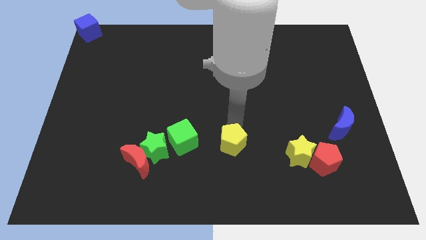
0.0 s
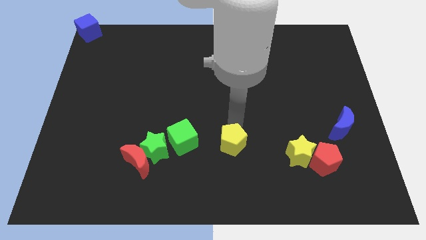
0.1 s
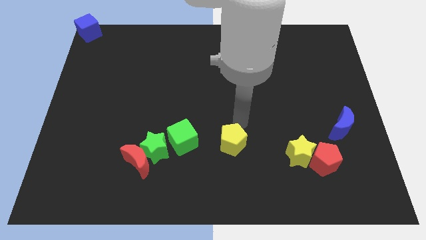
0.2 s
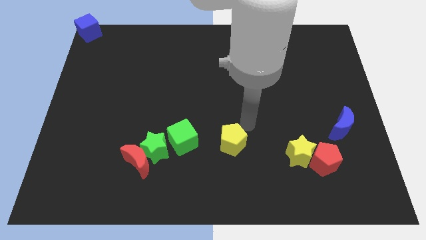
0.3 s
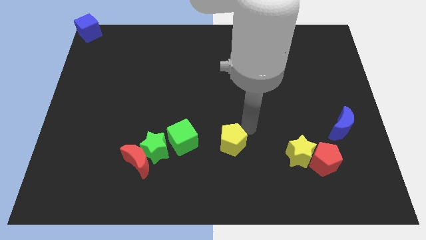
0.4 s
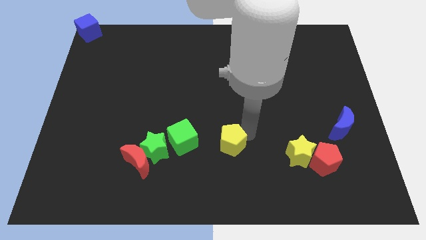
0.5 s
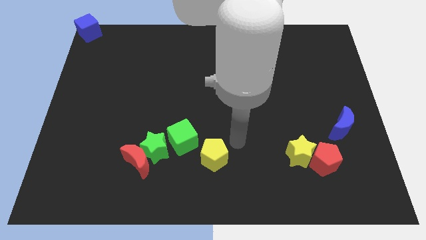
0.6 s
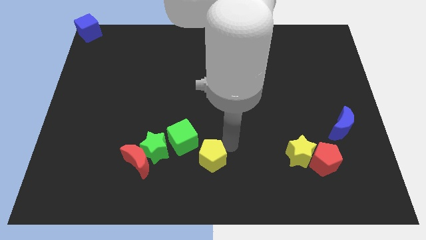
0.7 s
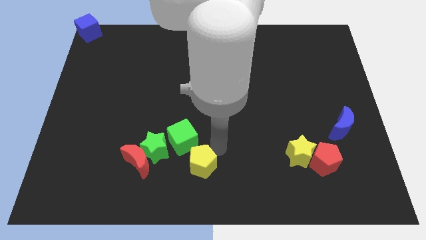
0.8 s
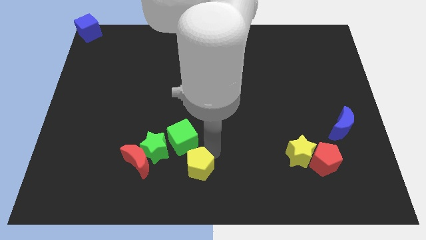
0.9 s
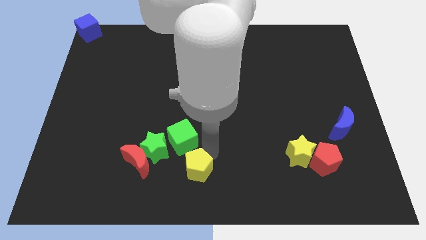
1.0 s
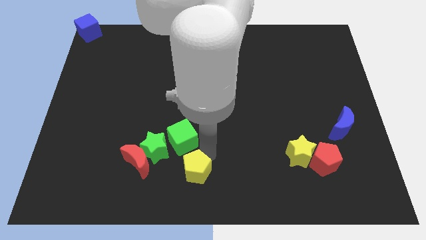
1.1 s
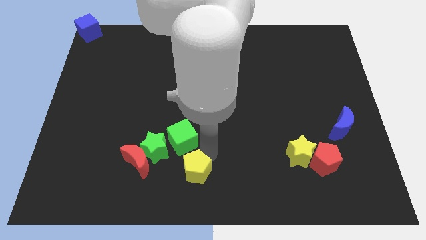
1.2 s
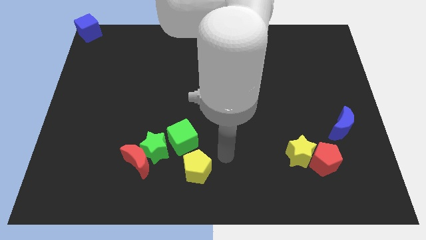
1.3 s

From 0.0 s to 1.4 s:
place the yellow pentagon below the green cube

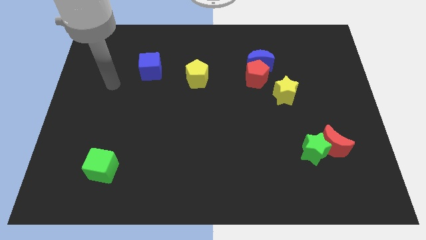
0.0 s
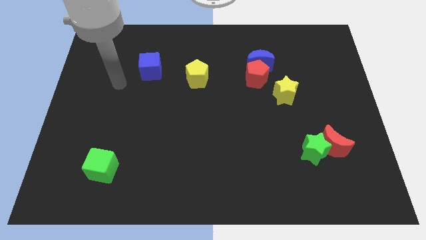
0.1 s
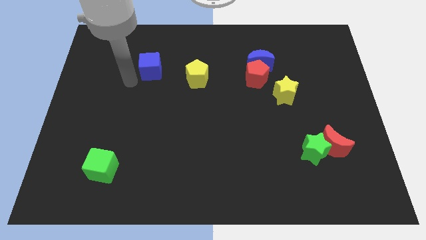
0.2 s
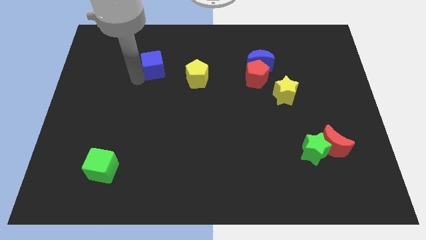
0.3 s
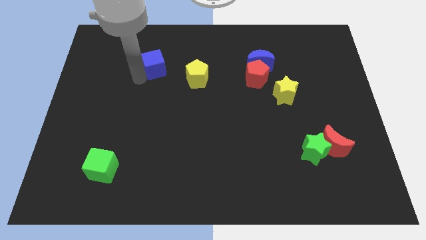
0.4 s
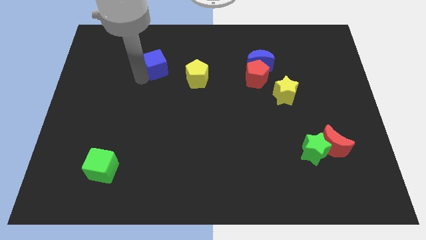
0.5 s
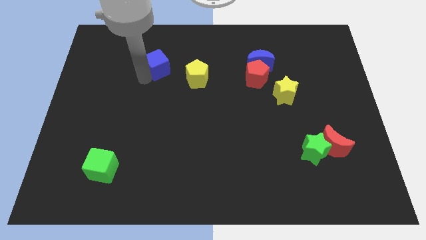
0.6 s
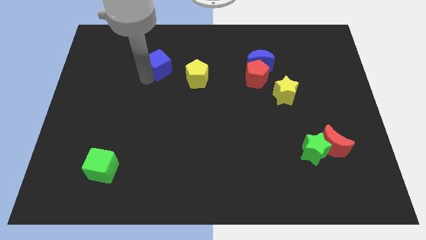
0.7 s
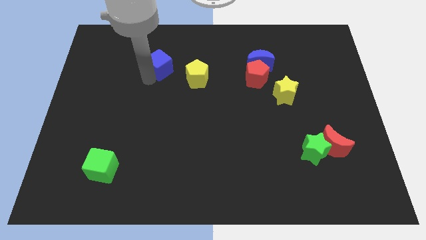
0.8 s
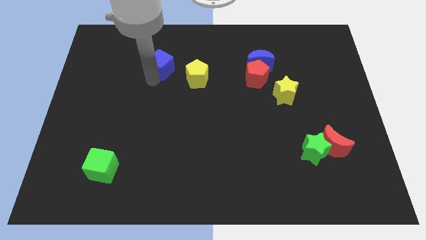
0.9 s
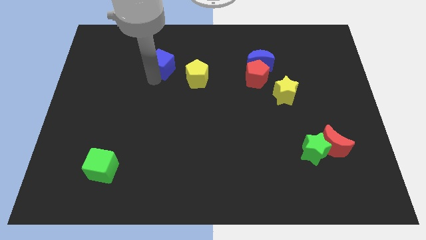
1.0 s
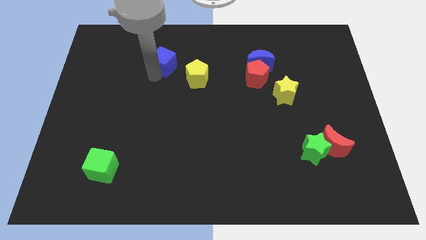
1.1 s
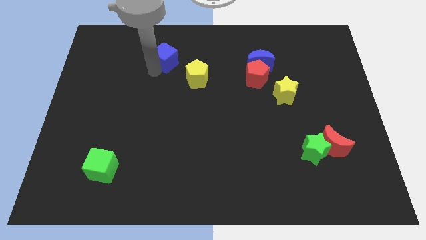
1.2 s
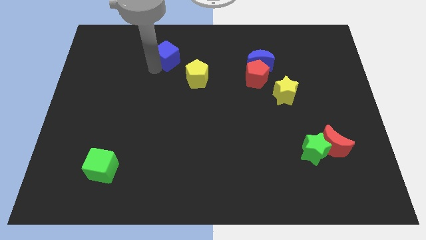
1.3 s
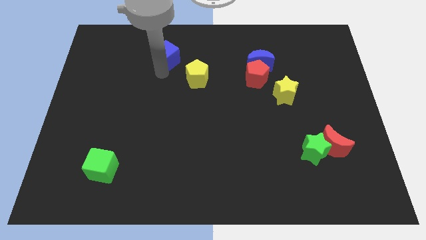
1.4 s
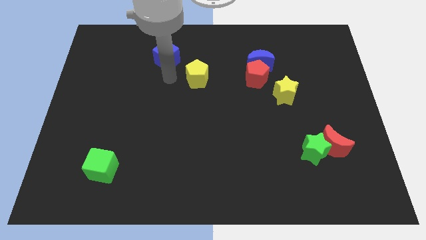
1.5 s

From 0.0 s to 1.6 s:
push the blue cube slightly to the top

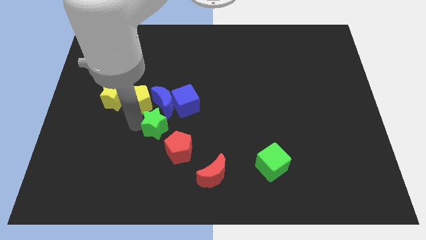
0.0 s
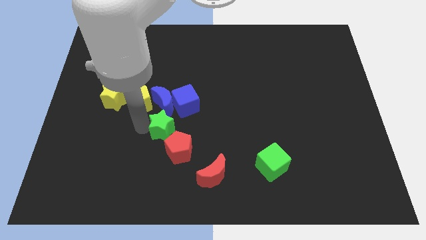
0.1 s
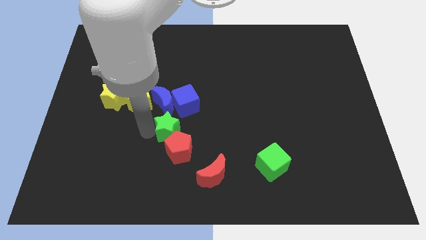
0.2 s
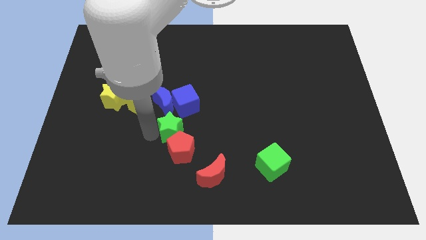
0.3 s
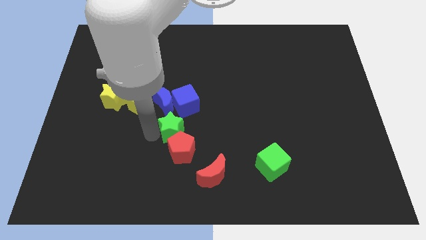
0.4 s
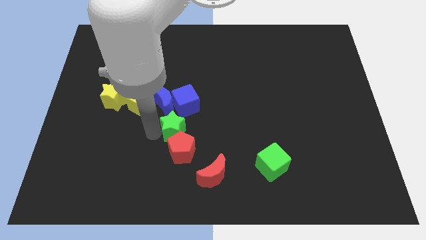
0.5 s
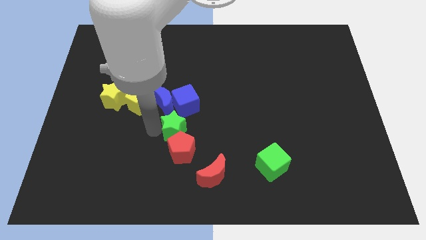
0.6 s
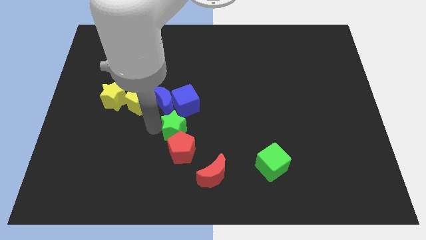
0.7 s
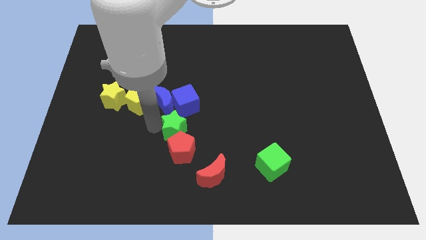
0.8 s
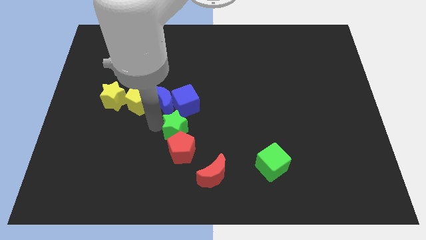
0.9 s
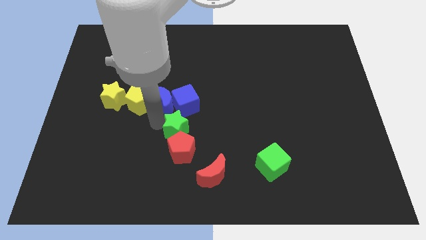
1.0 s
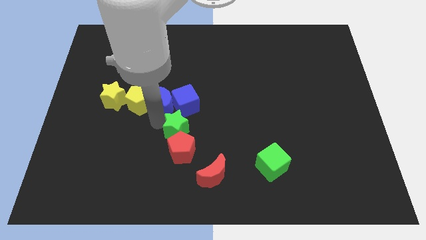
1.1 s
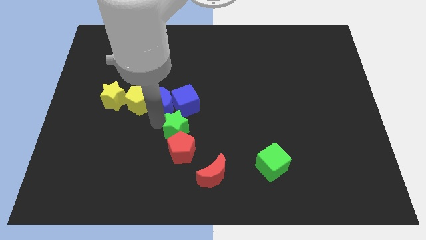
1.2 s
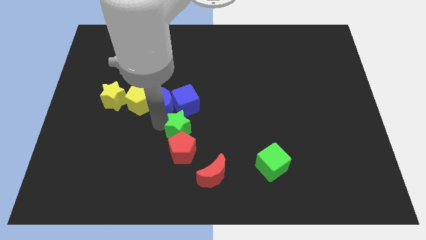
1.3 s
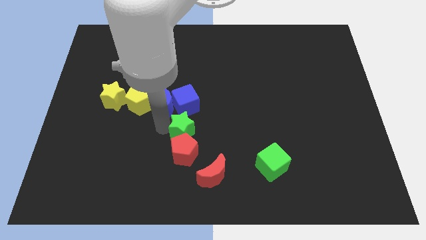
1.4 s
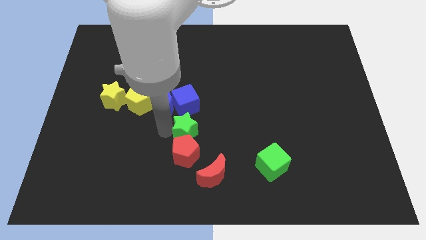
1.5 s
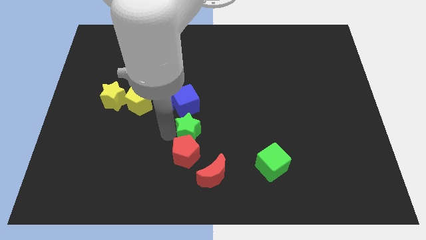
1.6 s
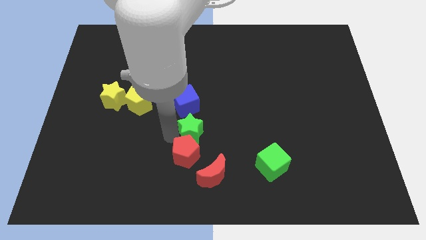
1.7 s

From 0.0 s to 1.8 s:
slide the green star slightly to the right

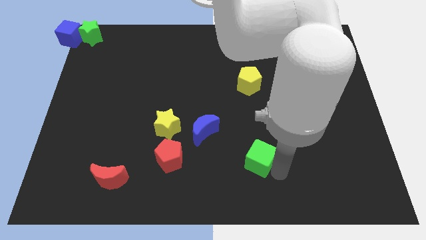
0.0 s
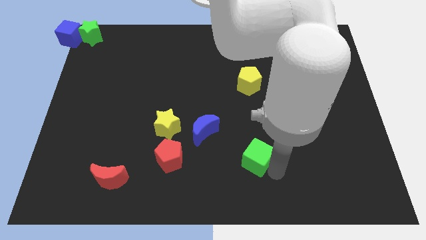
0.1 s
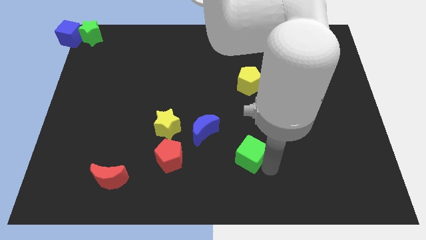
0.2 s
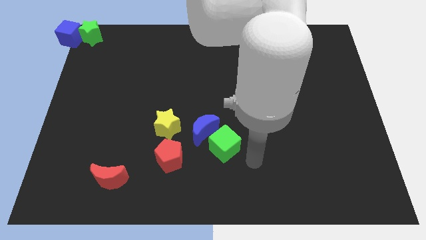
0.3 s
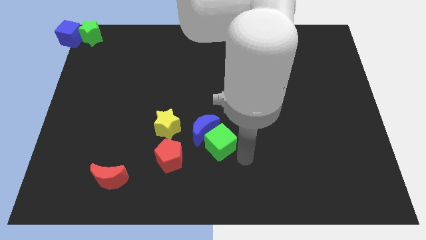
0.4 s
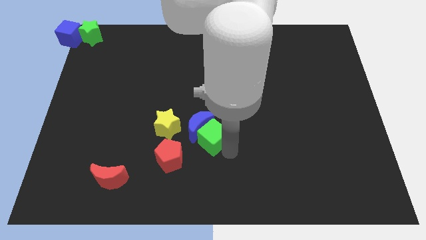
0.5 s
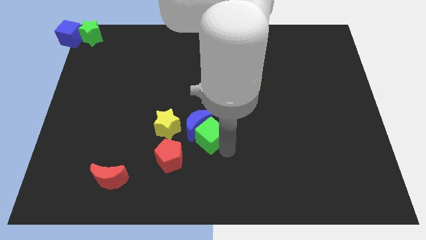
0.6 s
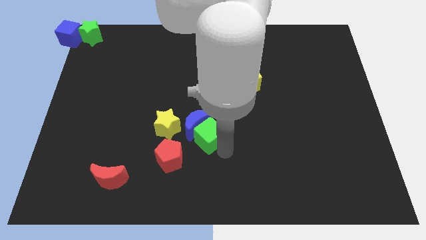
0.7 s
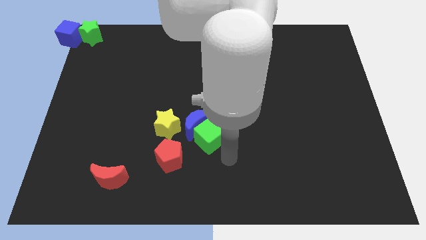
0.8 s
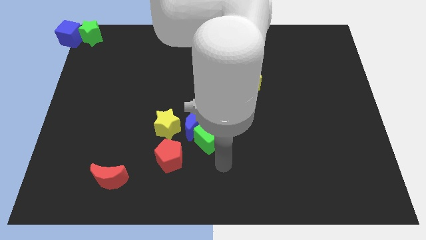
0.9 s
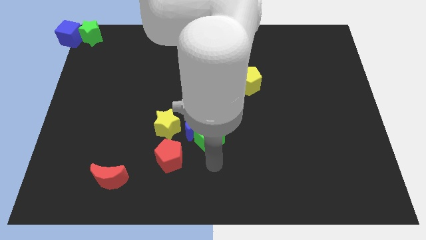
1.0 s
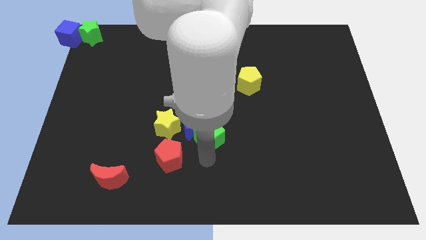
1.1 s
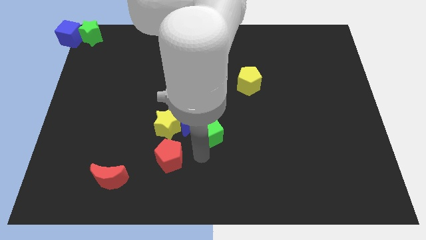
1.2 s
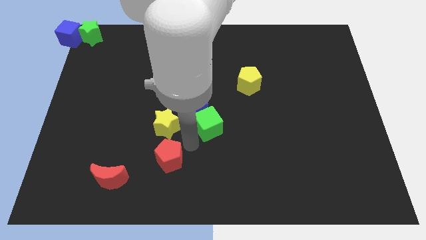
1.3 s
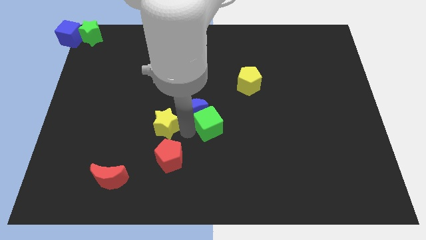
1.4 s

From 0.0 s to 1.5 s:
push the green cube into the blue crescent

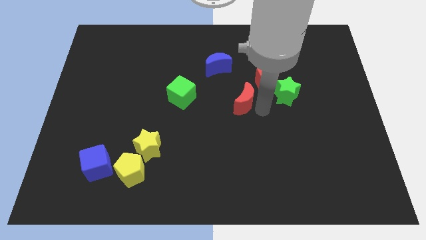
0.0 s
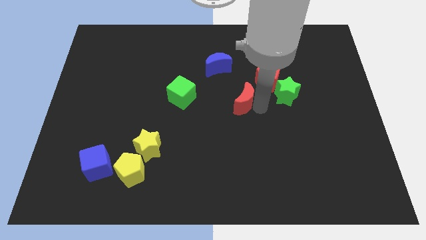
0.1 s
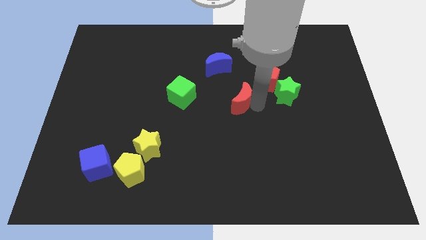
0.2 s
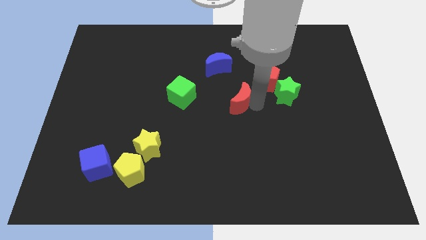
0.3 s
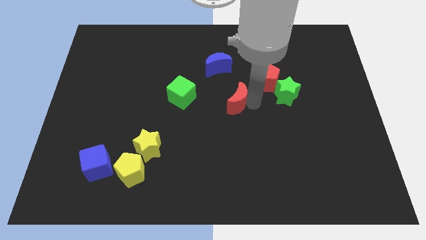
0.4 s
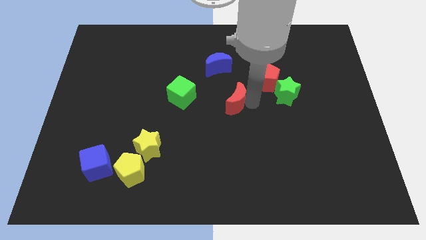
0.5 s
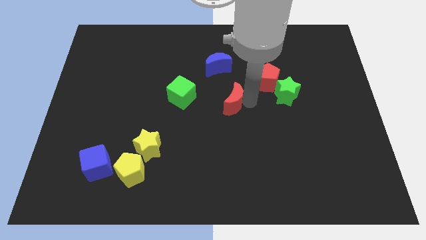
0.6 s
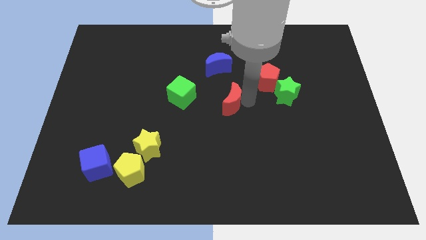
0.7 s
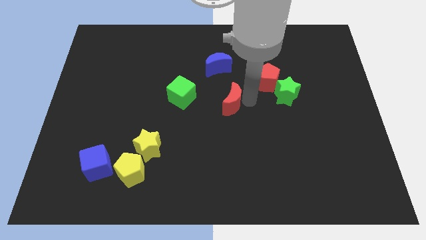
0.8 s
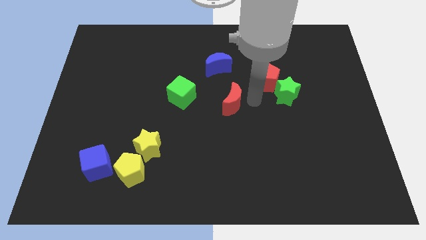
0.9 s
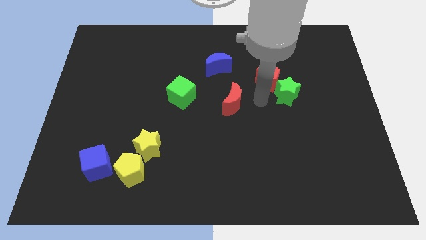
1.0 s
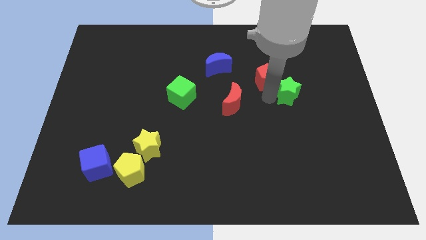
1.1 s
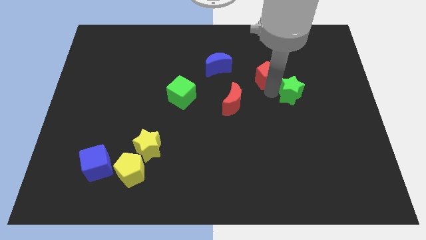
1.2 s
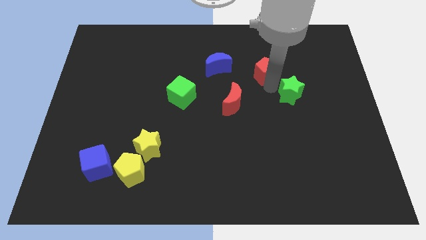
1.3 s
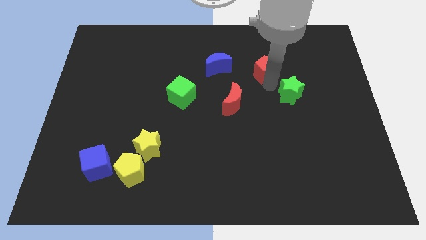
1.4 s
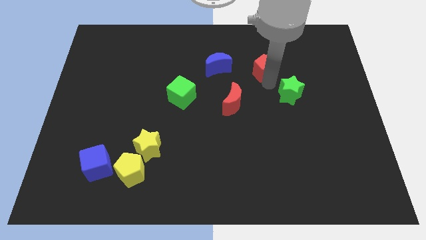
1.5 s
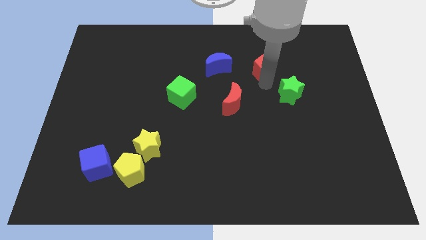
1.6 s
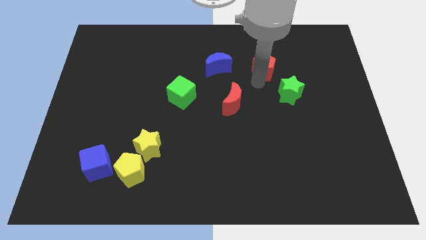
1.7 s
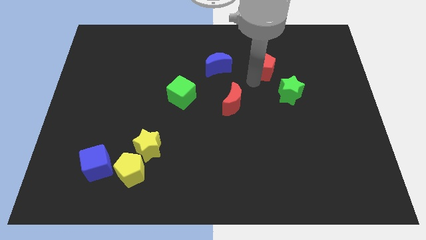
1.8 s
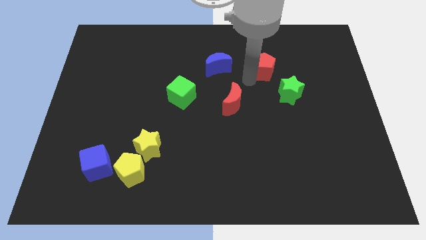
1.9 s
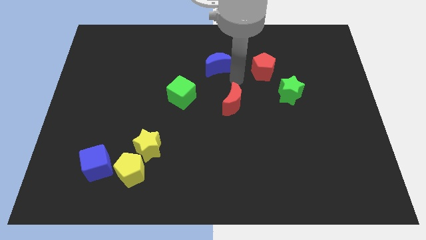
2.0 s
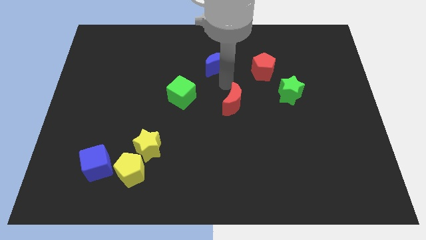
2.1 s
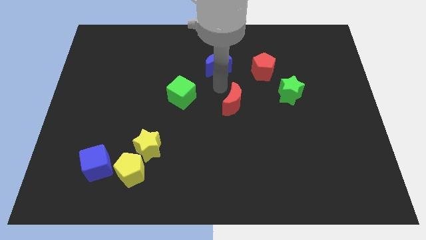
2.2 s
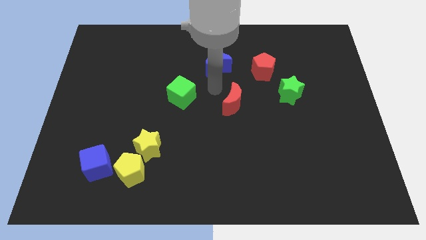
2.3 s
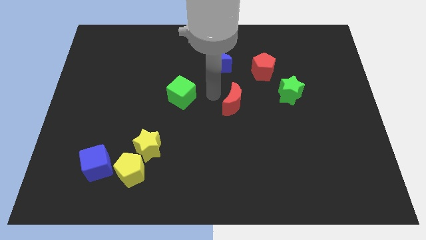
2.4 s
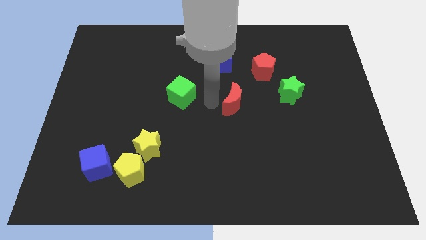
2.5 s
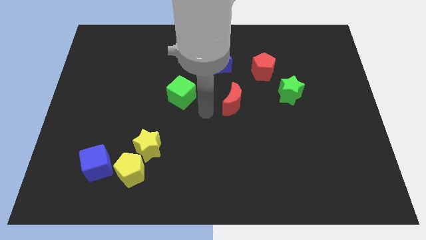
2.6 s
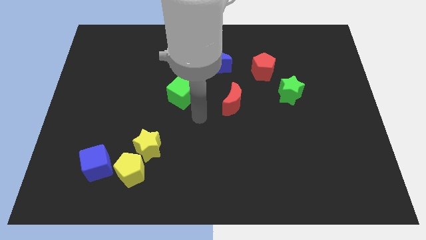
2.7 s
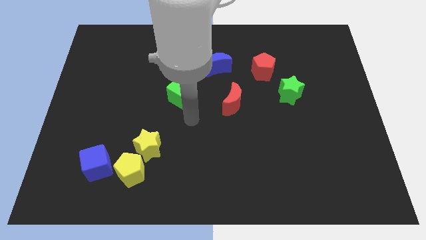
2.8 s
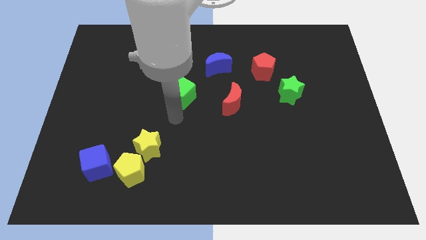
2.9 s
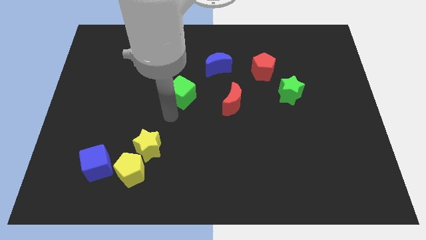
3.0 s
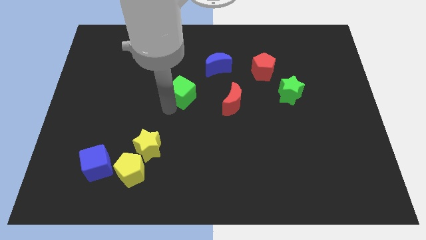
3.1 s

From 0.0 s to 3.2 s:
place red pentagon to the right of blue moon
